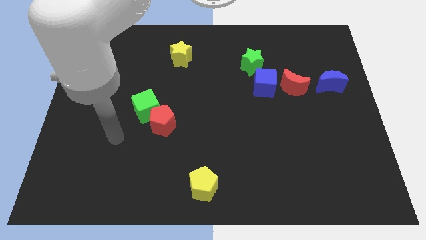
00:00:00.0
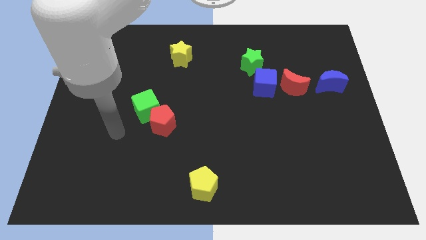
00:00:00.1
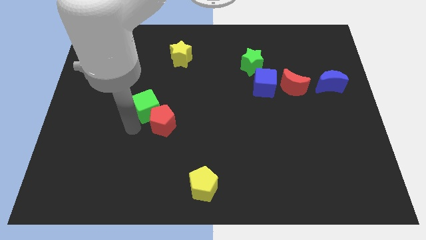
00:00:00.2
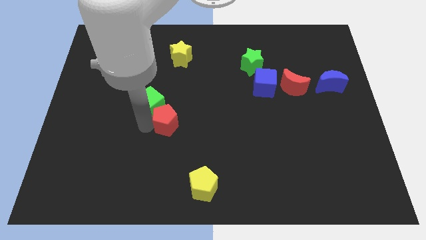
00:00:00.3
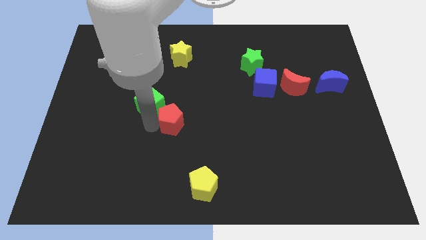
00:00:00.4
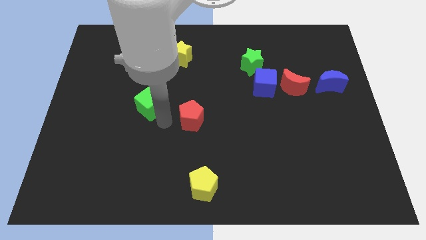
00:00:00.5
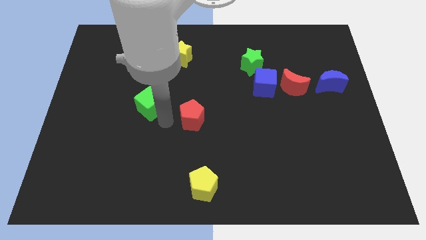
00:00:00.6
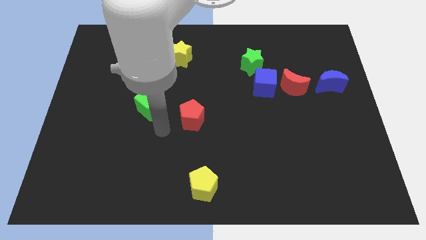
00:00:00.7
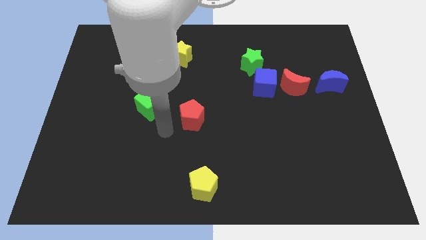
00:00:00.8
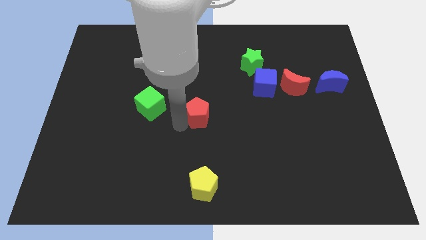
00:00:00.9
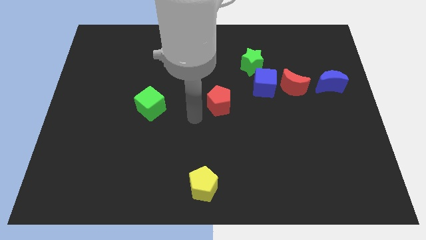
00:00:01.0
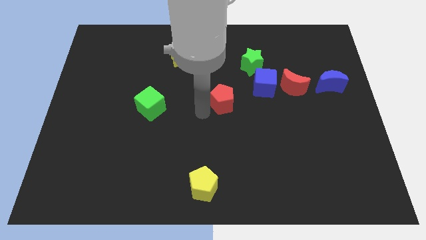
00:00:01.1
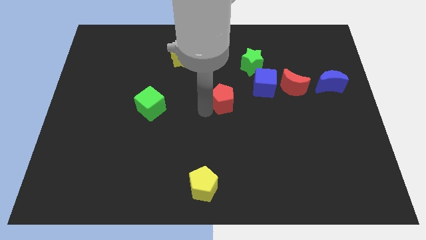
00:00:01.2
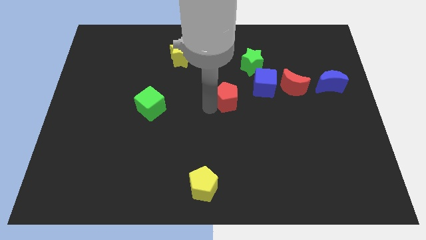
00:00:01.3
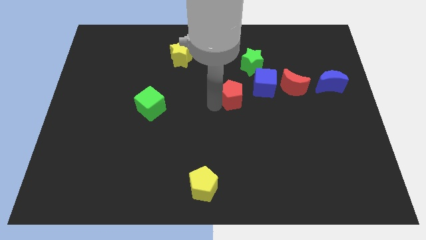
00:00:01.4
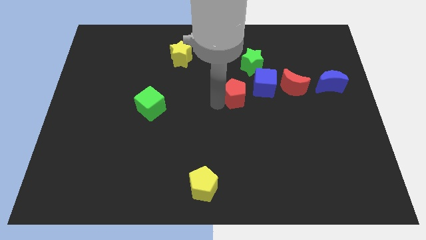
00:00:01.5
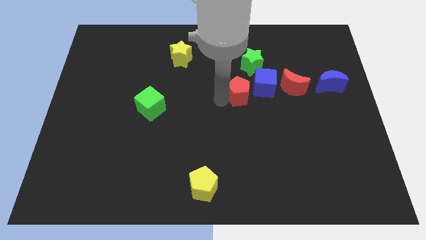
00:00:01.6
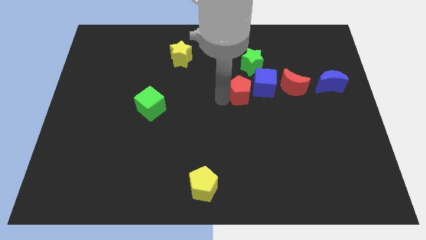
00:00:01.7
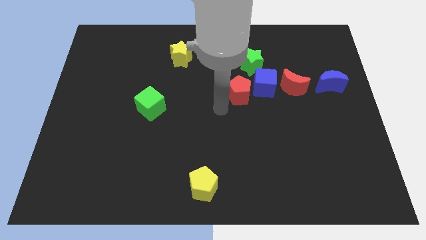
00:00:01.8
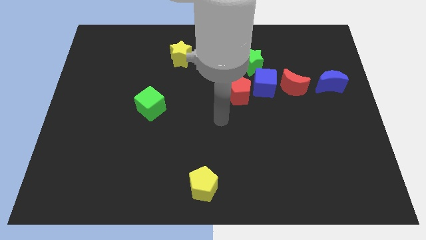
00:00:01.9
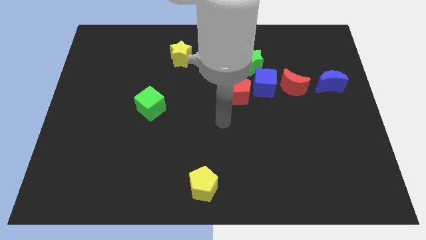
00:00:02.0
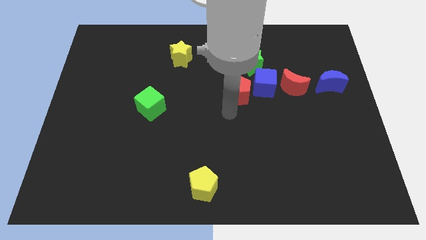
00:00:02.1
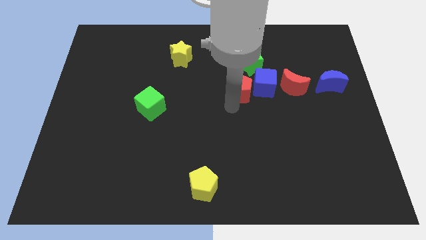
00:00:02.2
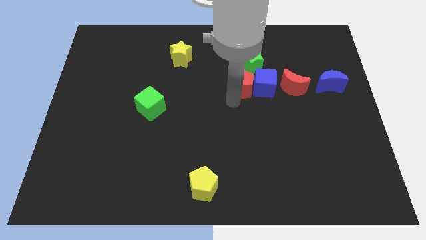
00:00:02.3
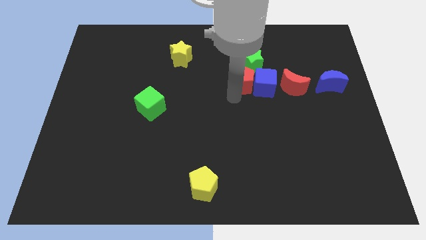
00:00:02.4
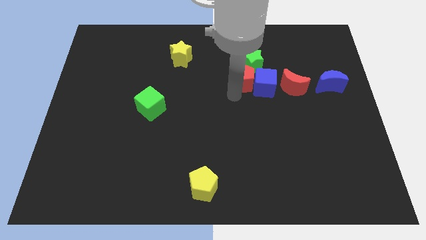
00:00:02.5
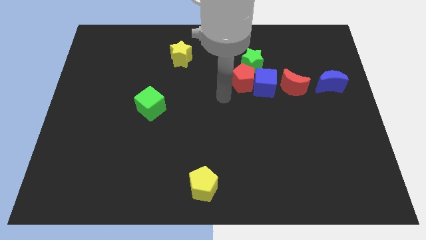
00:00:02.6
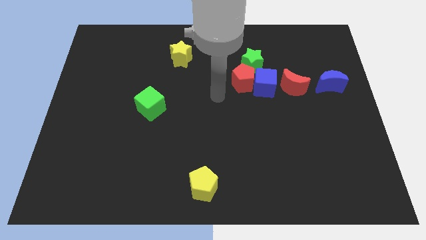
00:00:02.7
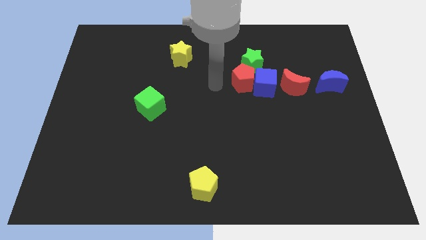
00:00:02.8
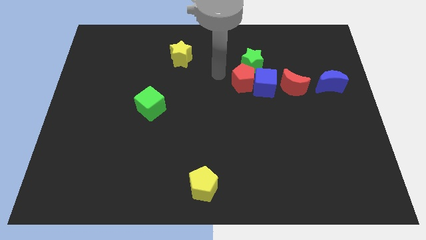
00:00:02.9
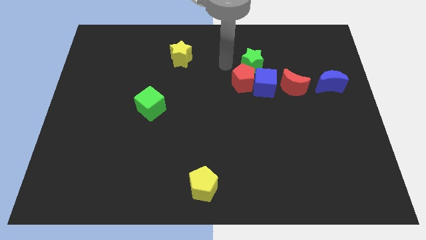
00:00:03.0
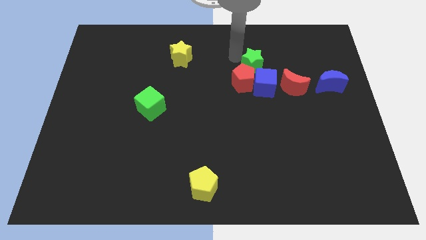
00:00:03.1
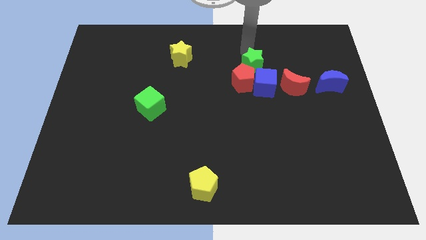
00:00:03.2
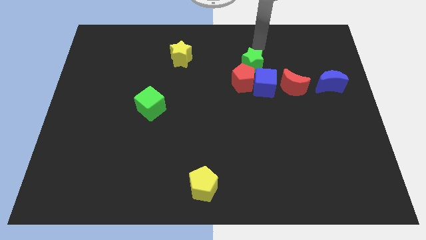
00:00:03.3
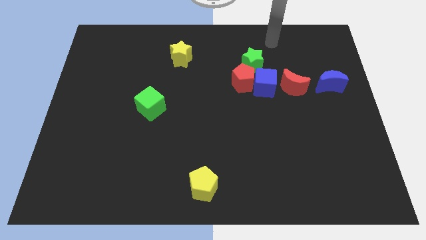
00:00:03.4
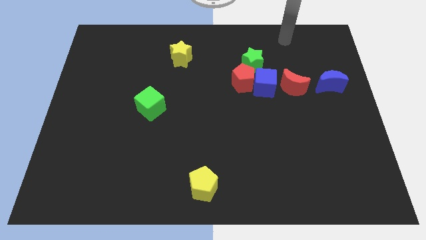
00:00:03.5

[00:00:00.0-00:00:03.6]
move the red pentagon to the left of the blue cube

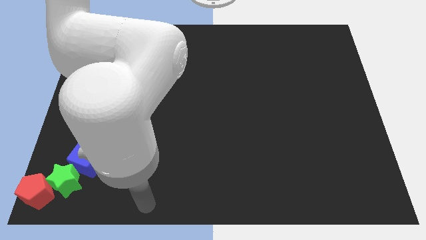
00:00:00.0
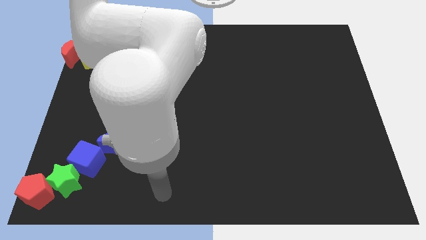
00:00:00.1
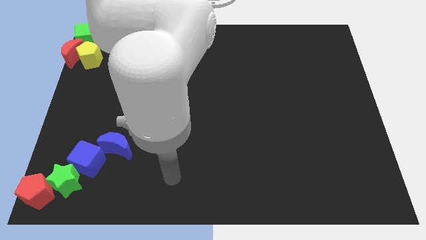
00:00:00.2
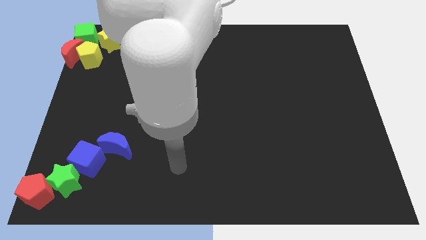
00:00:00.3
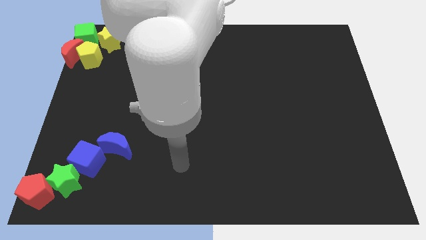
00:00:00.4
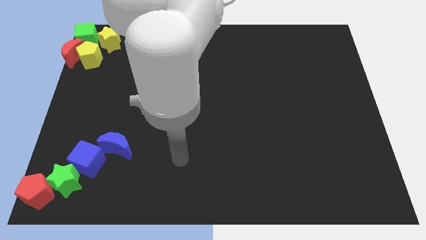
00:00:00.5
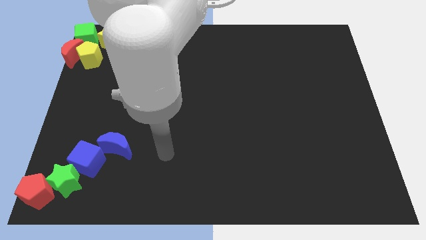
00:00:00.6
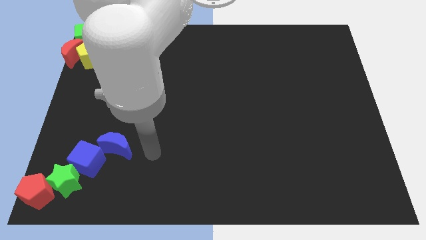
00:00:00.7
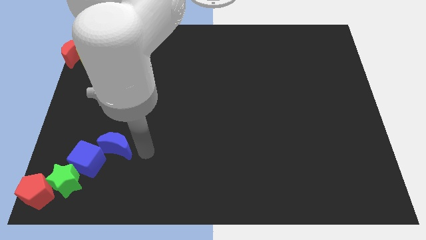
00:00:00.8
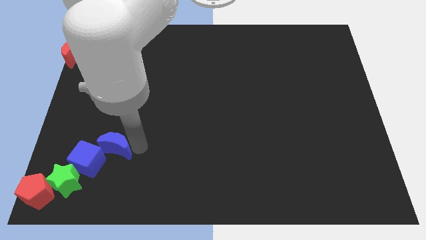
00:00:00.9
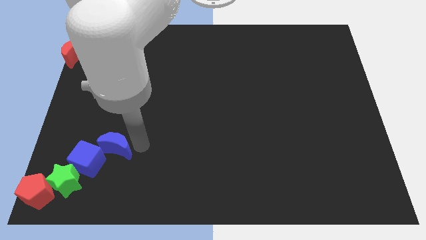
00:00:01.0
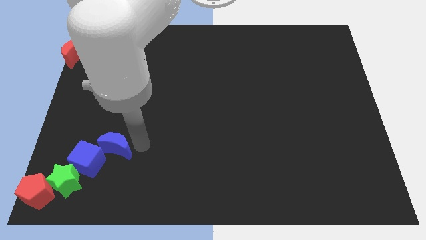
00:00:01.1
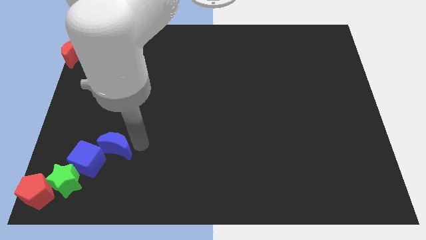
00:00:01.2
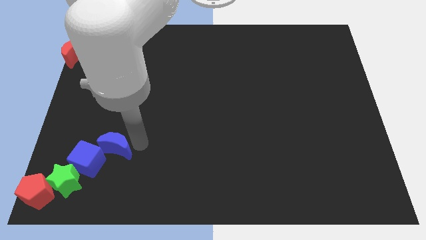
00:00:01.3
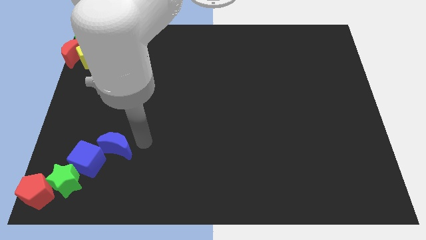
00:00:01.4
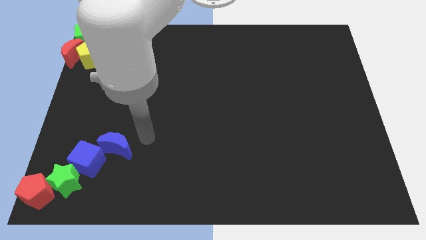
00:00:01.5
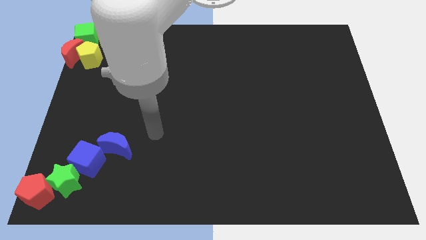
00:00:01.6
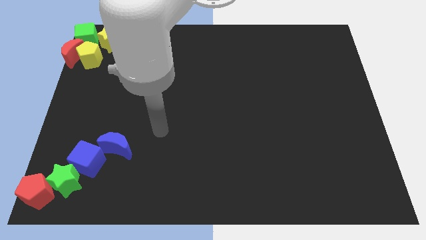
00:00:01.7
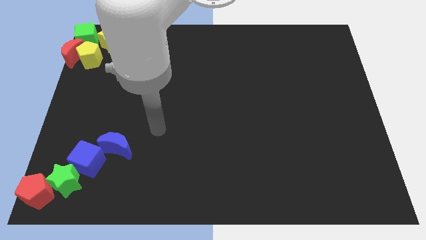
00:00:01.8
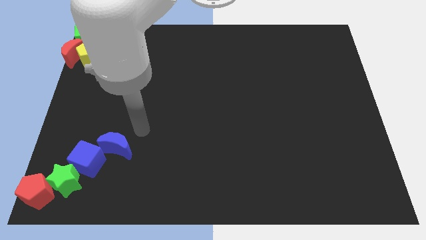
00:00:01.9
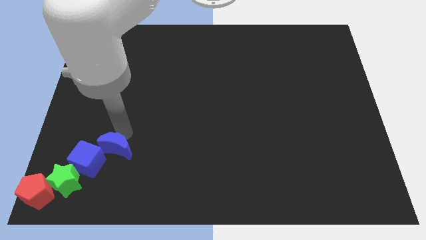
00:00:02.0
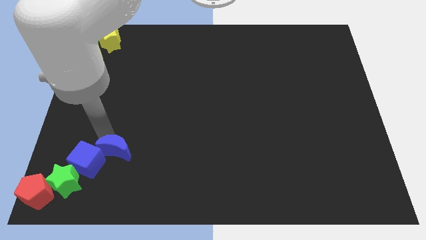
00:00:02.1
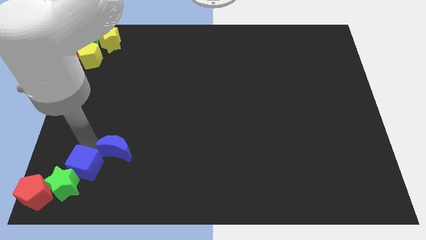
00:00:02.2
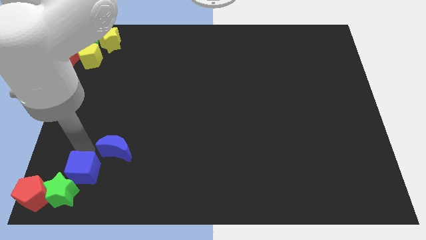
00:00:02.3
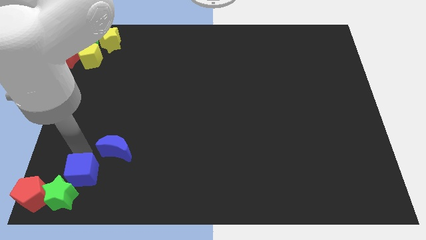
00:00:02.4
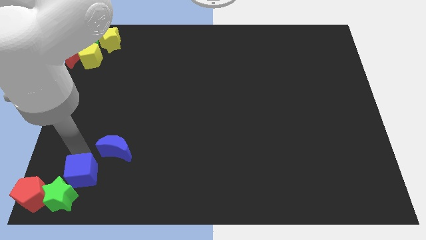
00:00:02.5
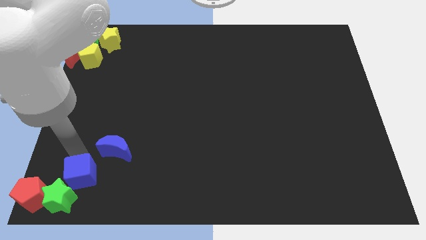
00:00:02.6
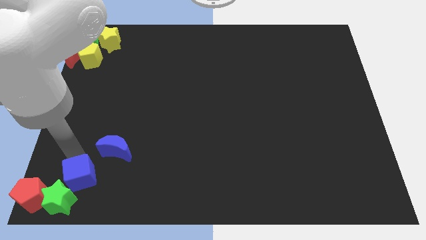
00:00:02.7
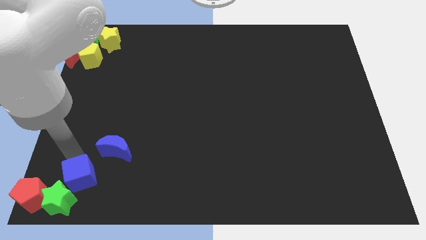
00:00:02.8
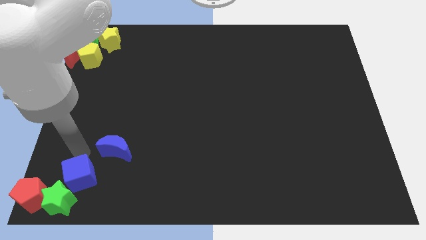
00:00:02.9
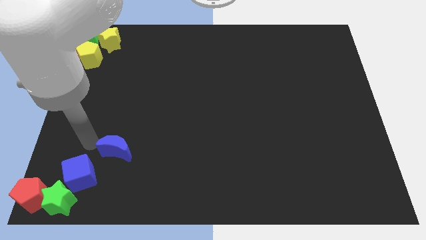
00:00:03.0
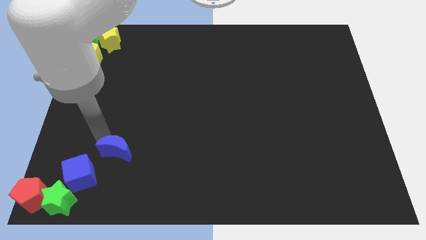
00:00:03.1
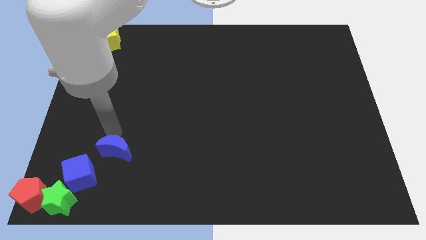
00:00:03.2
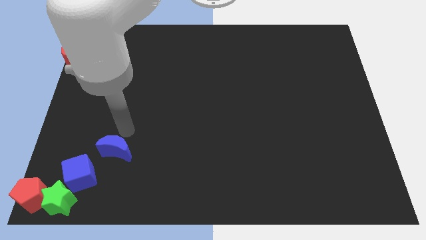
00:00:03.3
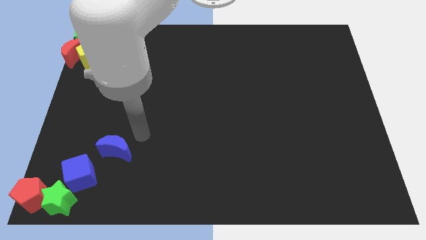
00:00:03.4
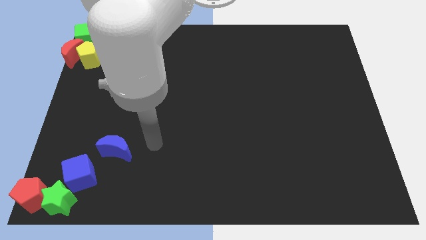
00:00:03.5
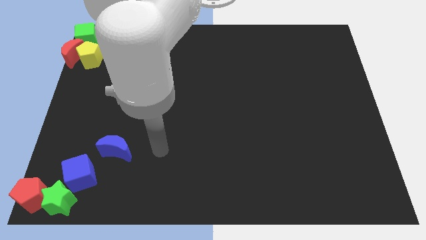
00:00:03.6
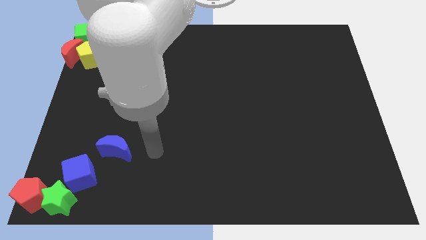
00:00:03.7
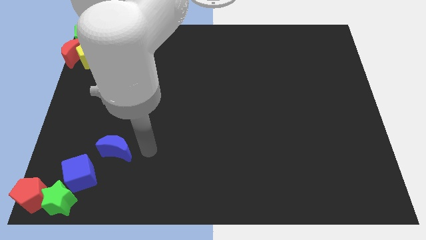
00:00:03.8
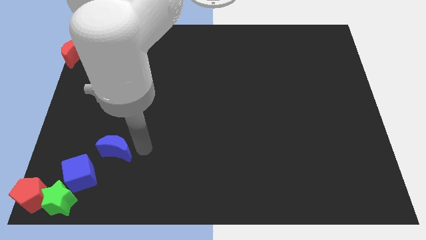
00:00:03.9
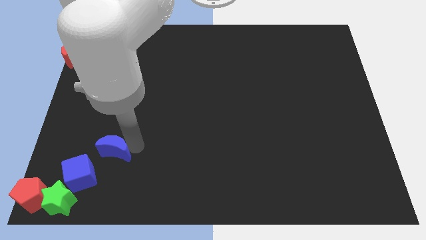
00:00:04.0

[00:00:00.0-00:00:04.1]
separate blue cube from the blue moon

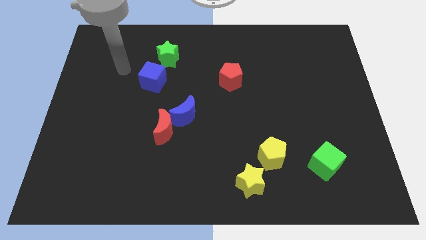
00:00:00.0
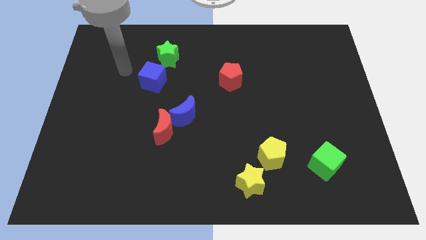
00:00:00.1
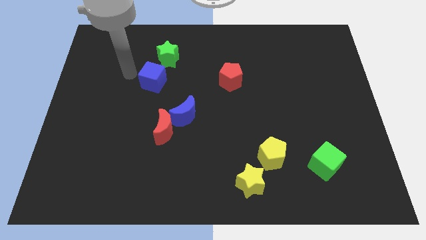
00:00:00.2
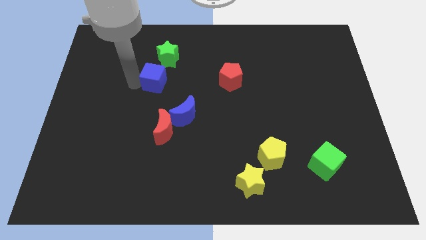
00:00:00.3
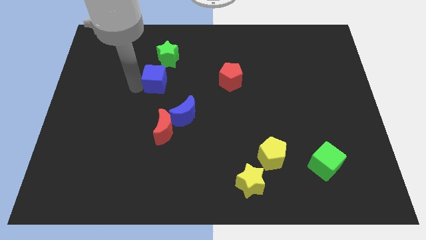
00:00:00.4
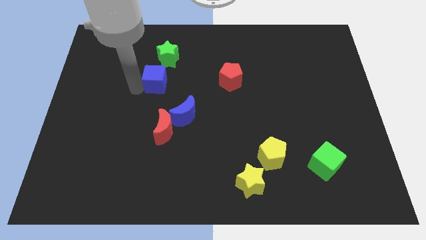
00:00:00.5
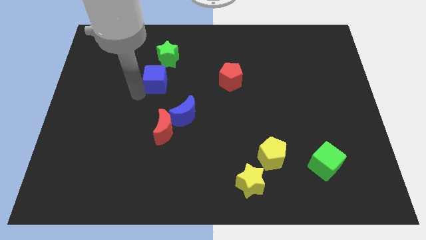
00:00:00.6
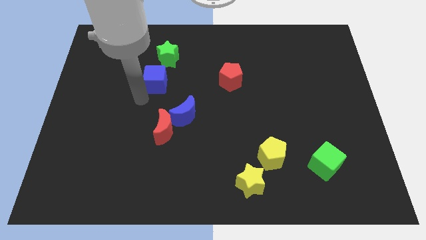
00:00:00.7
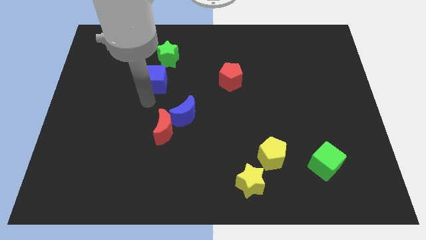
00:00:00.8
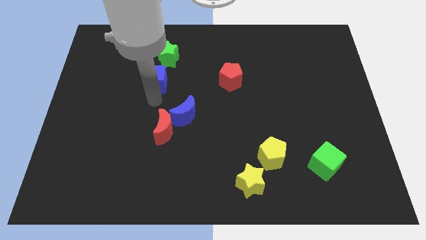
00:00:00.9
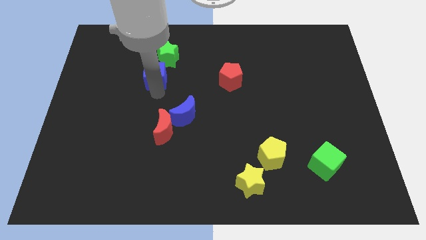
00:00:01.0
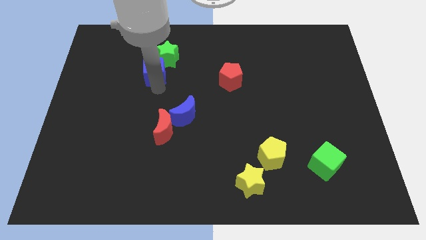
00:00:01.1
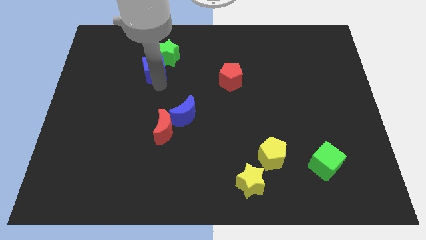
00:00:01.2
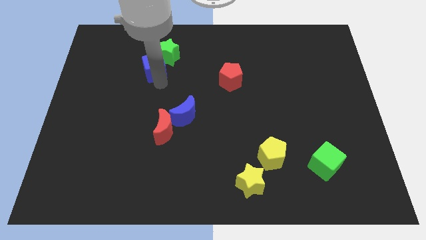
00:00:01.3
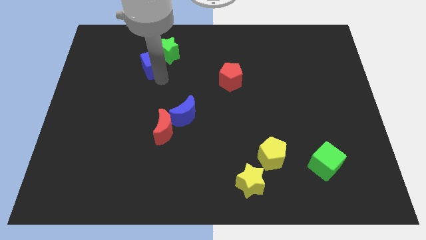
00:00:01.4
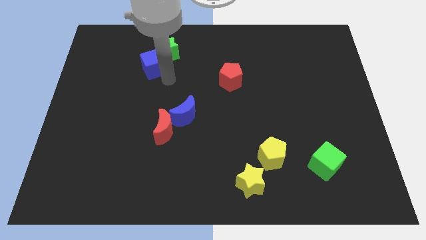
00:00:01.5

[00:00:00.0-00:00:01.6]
move the blue cube into the green star
